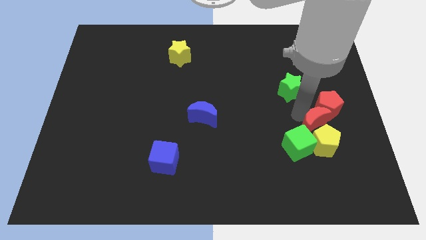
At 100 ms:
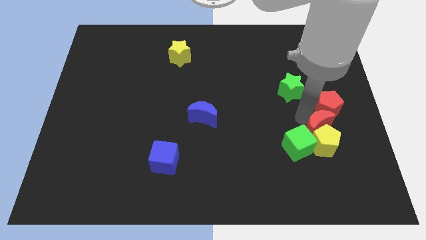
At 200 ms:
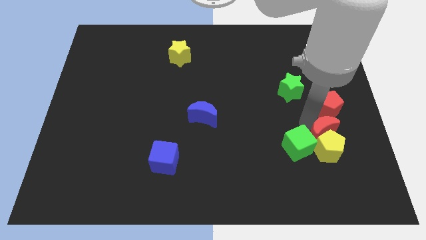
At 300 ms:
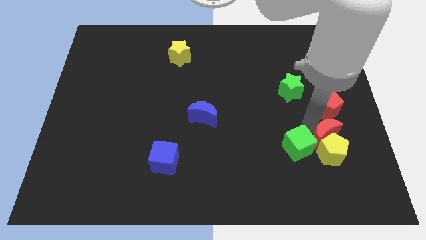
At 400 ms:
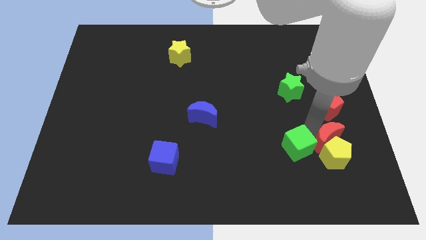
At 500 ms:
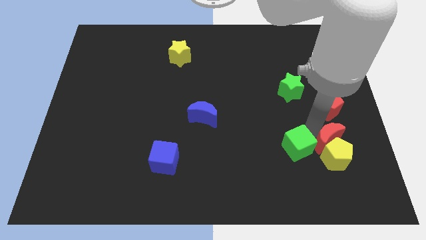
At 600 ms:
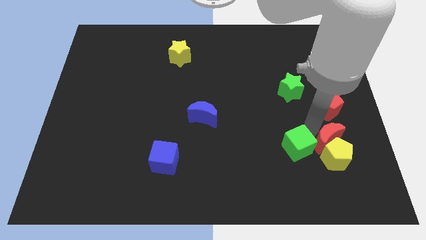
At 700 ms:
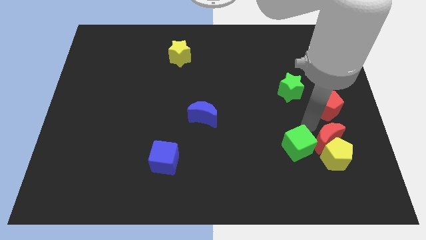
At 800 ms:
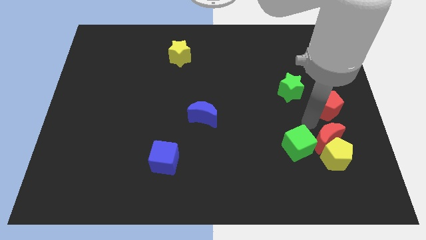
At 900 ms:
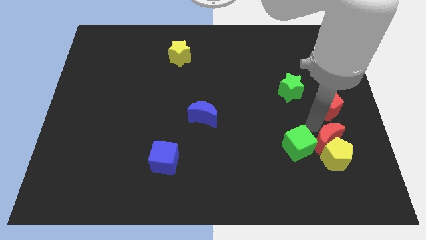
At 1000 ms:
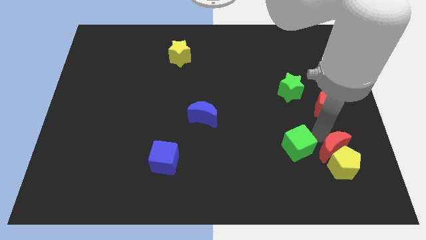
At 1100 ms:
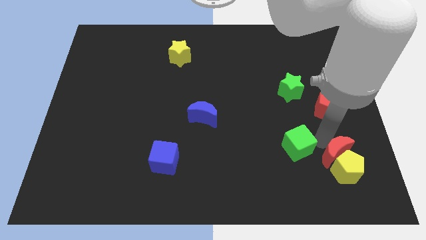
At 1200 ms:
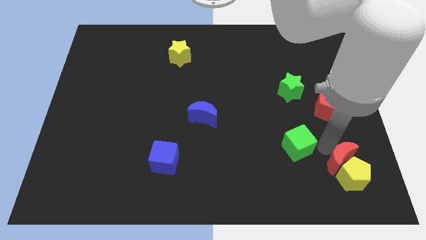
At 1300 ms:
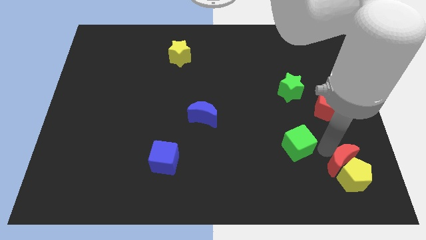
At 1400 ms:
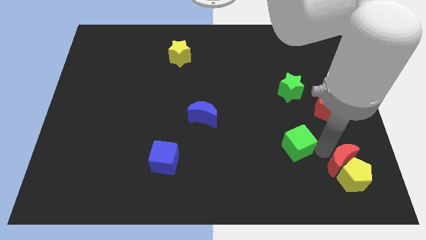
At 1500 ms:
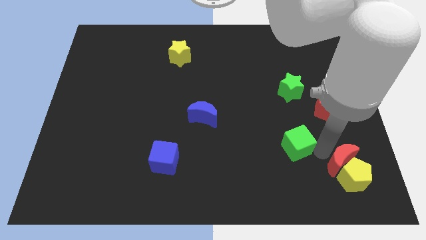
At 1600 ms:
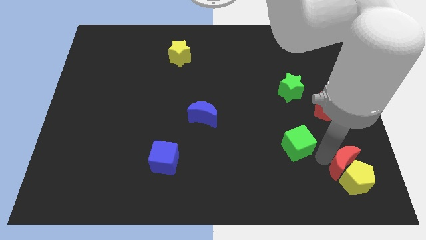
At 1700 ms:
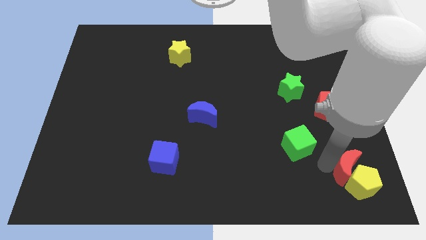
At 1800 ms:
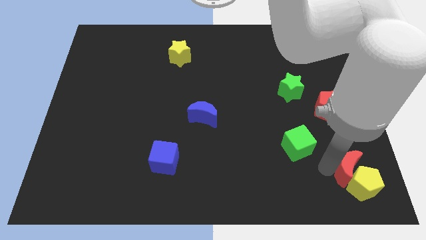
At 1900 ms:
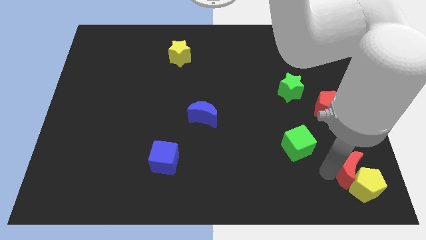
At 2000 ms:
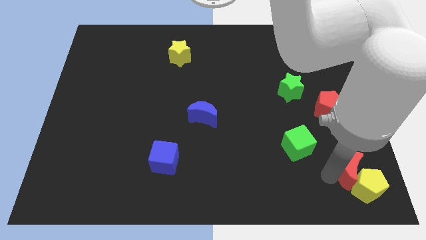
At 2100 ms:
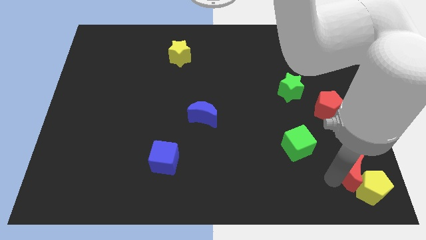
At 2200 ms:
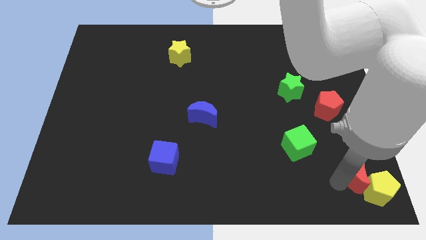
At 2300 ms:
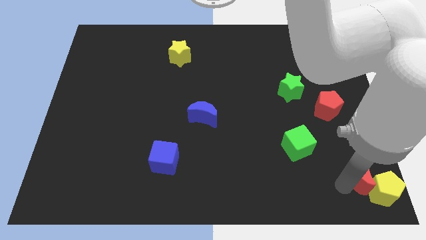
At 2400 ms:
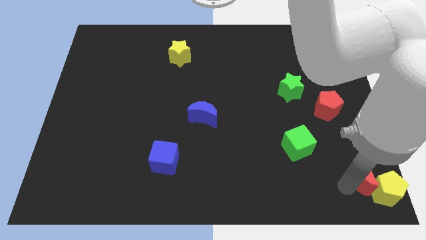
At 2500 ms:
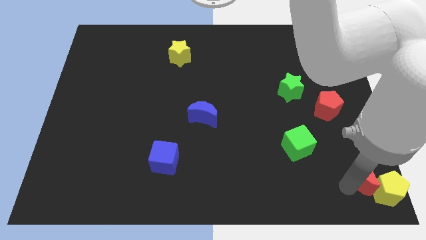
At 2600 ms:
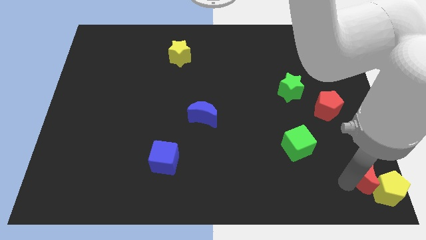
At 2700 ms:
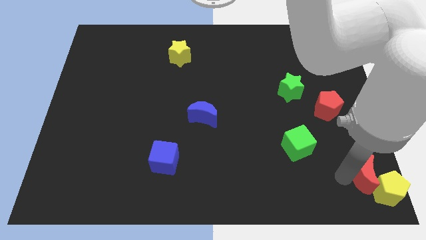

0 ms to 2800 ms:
move the red crescent along with yellow pentagon to the bottom right of the board

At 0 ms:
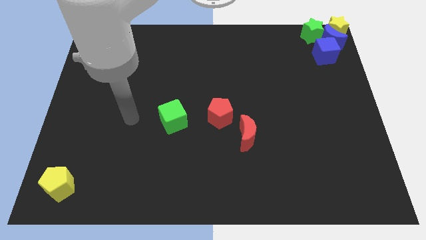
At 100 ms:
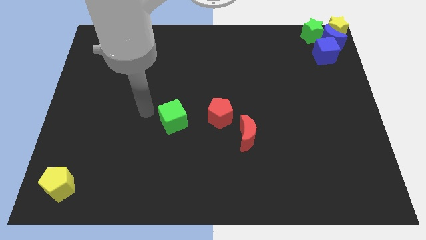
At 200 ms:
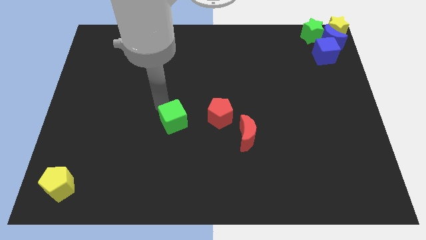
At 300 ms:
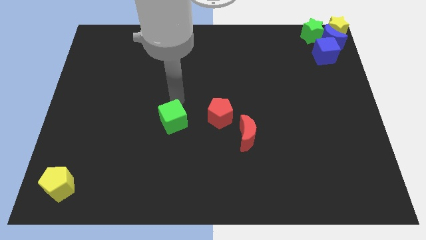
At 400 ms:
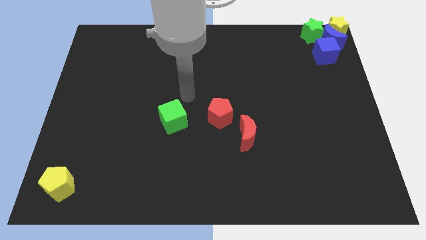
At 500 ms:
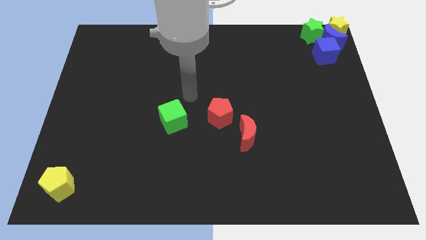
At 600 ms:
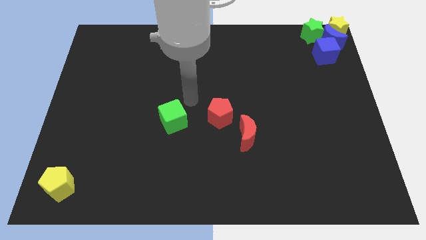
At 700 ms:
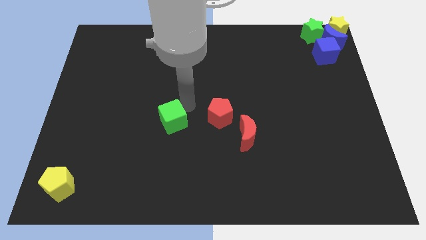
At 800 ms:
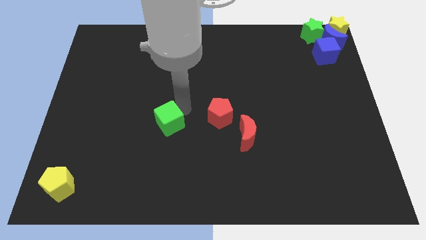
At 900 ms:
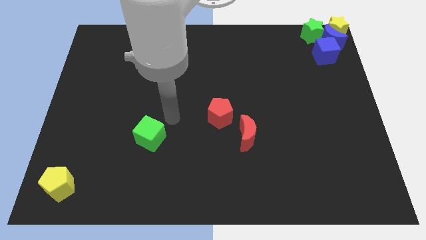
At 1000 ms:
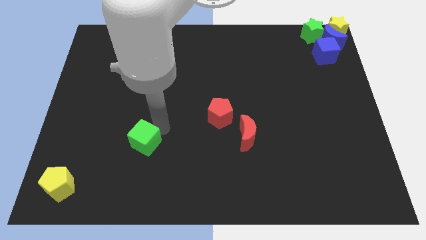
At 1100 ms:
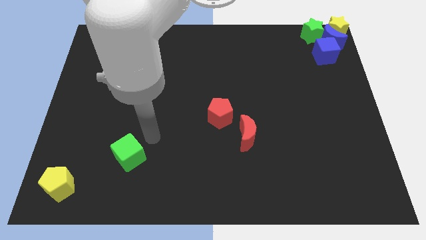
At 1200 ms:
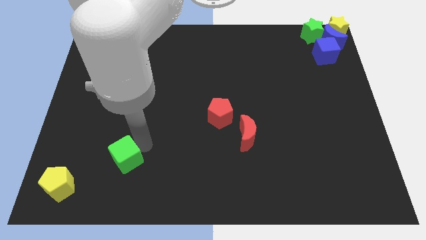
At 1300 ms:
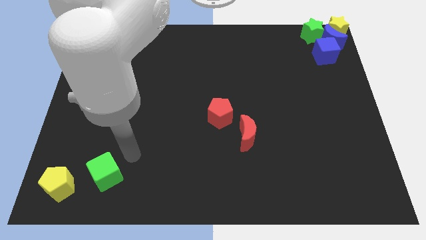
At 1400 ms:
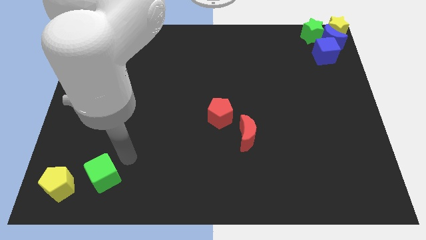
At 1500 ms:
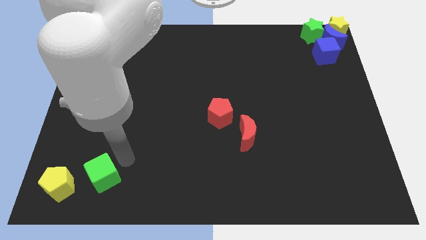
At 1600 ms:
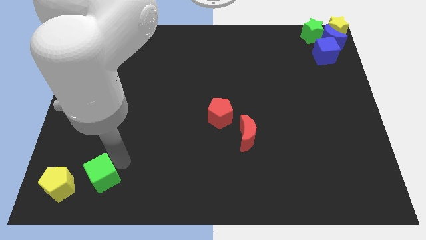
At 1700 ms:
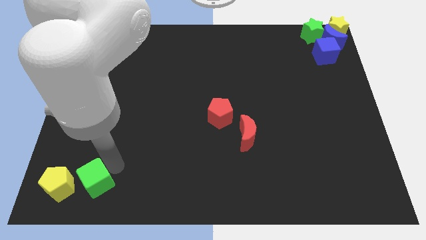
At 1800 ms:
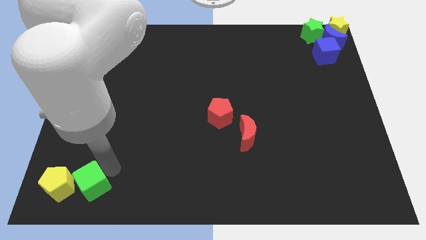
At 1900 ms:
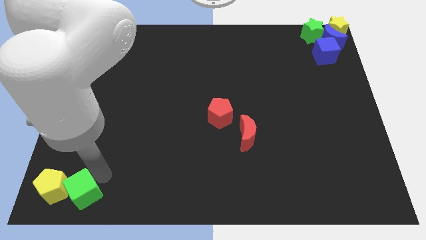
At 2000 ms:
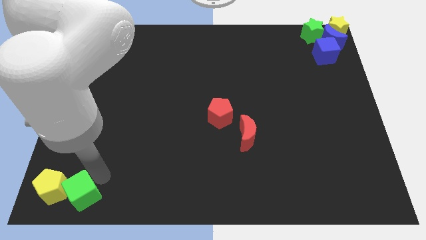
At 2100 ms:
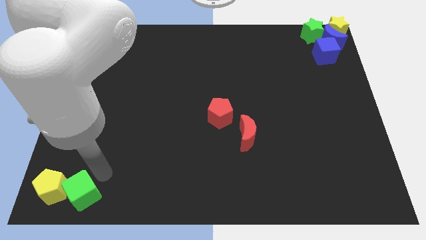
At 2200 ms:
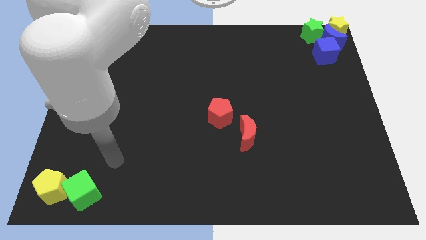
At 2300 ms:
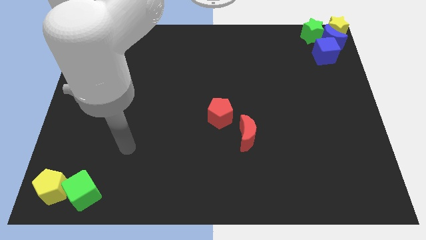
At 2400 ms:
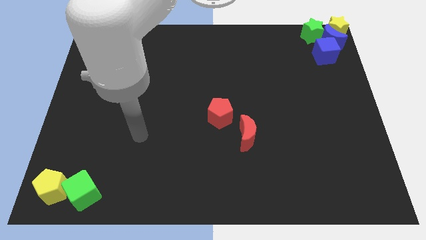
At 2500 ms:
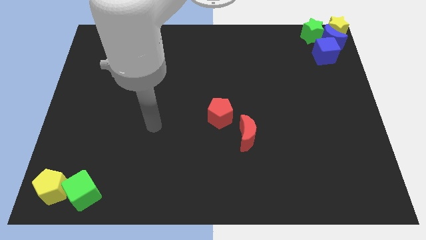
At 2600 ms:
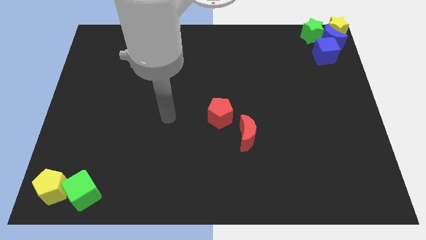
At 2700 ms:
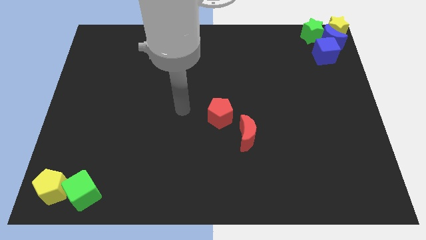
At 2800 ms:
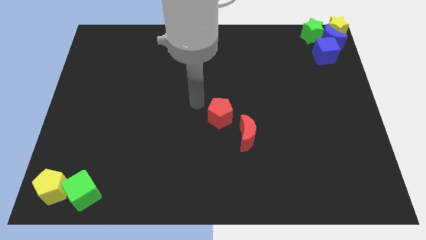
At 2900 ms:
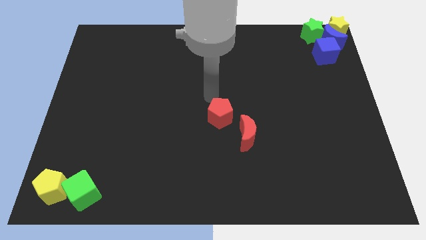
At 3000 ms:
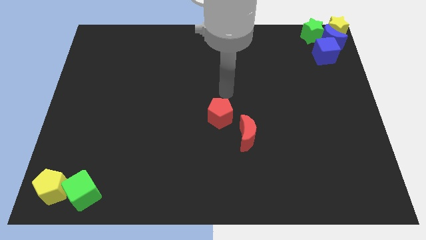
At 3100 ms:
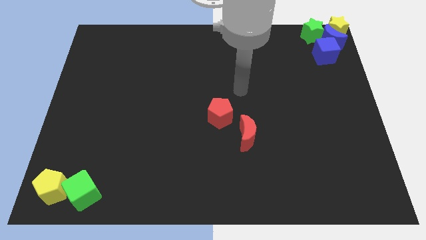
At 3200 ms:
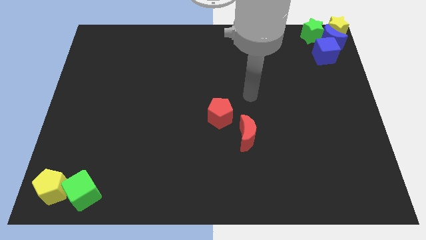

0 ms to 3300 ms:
move the green cube to the right of yellow pentagon

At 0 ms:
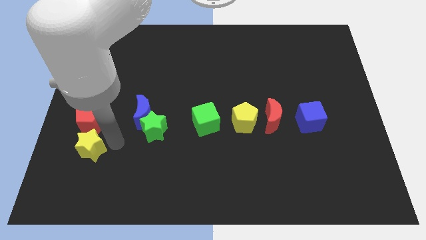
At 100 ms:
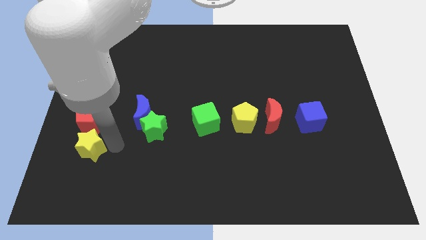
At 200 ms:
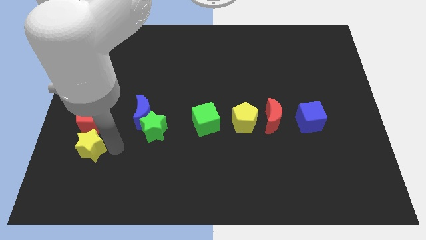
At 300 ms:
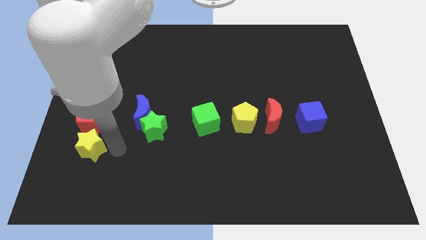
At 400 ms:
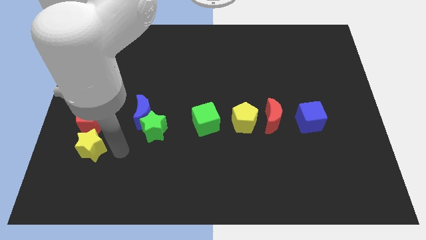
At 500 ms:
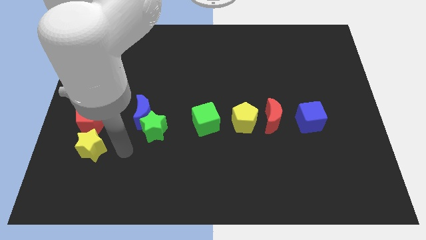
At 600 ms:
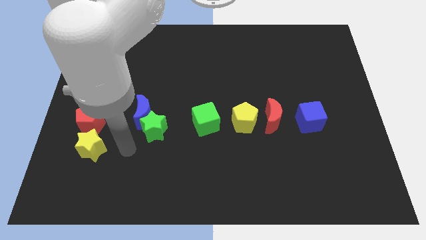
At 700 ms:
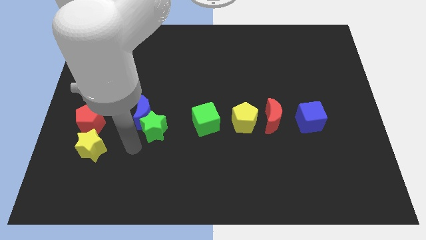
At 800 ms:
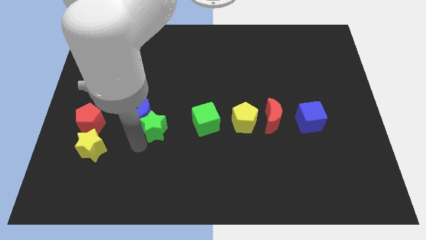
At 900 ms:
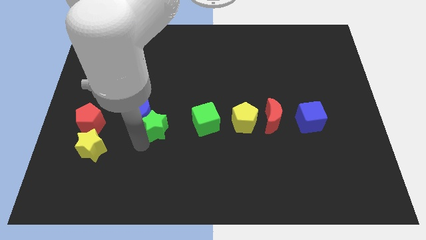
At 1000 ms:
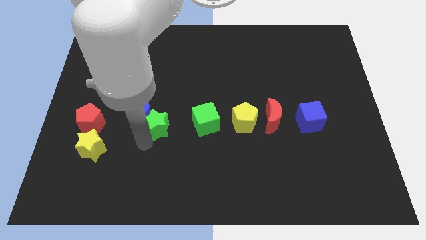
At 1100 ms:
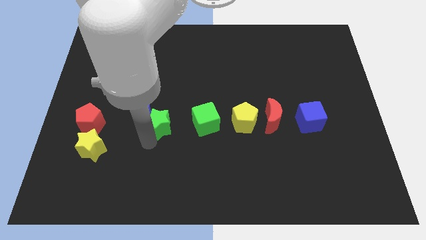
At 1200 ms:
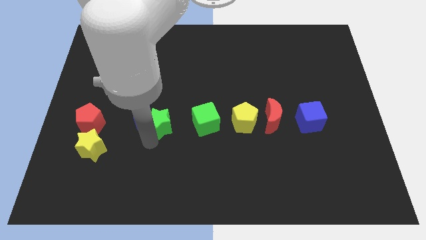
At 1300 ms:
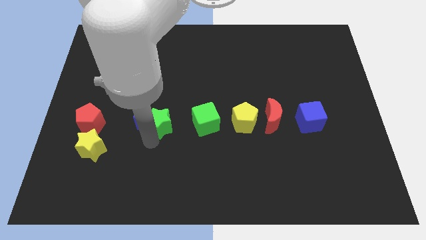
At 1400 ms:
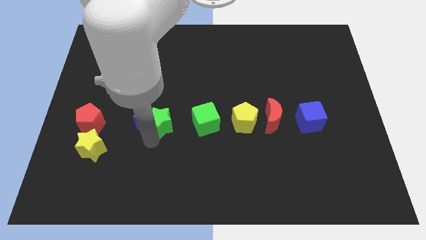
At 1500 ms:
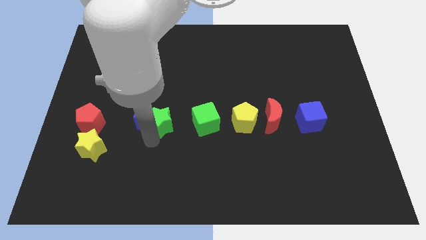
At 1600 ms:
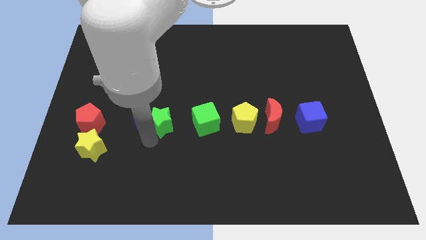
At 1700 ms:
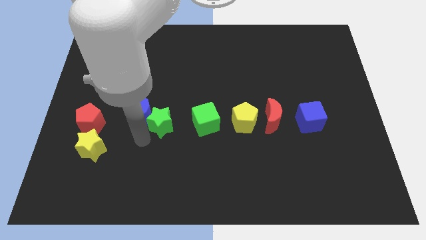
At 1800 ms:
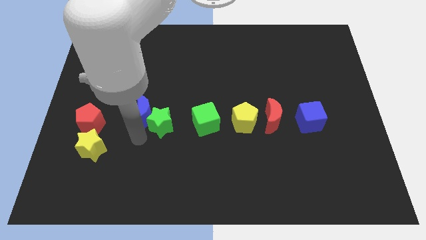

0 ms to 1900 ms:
push the green star slightly to the top side of the board

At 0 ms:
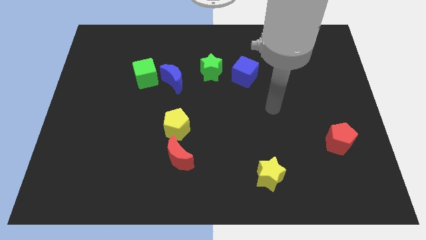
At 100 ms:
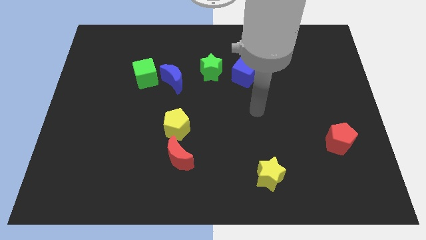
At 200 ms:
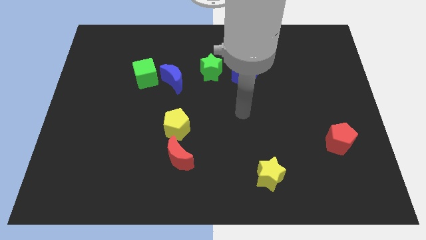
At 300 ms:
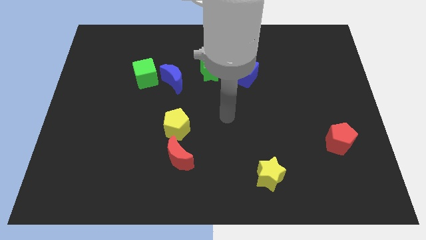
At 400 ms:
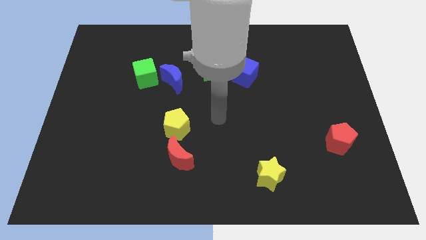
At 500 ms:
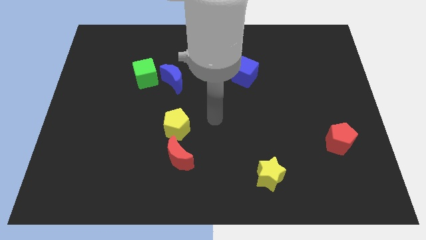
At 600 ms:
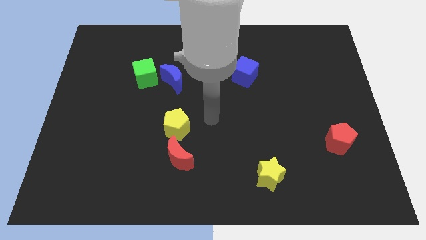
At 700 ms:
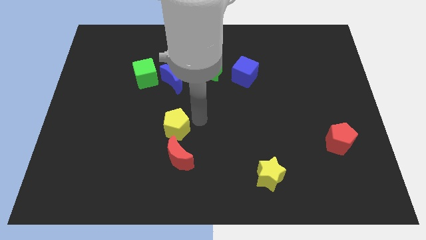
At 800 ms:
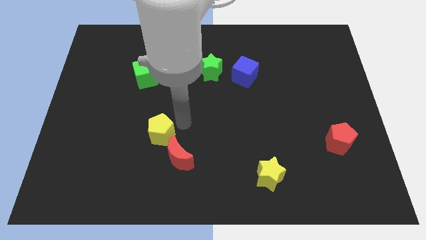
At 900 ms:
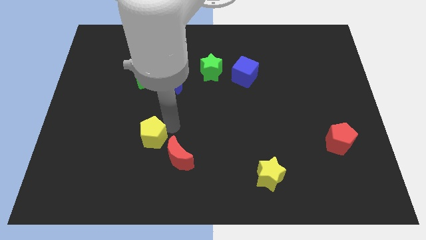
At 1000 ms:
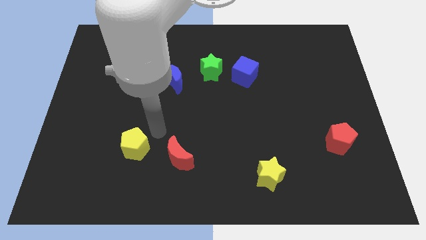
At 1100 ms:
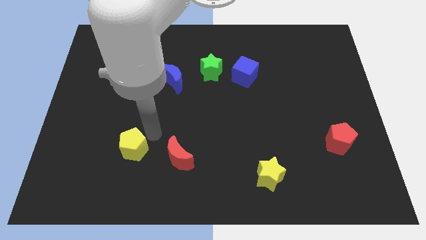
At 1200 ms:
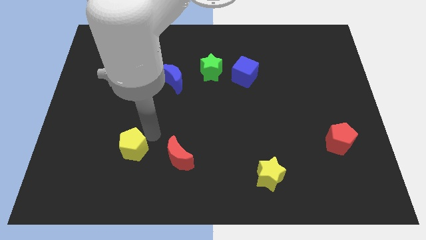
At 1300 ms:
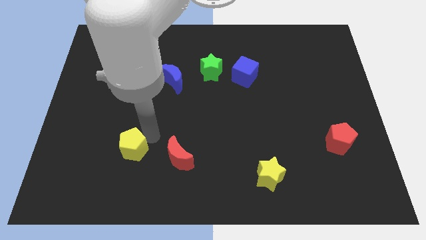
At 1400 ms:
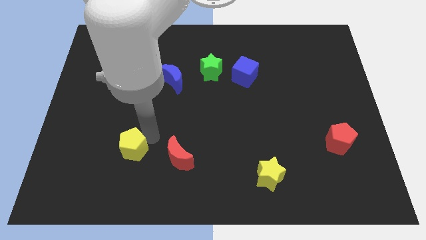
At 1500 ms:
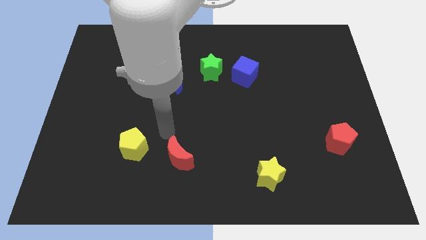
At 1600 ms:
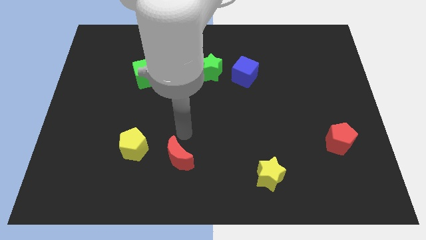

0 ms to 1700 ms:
slightly push the yellow pentagon
